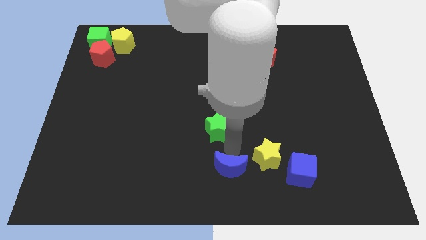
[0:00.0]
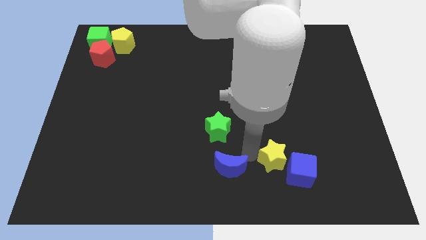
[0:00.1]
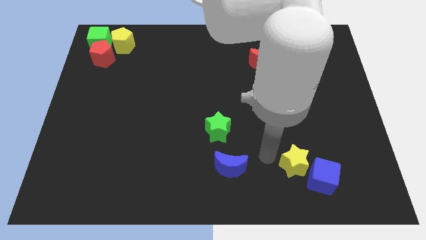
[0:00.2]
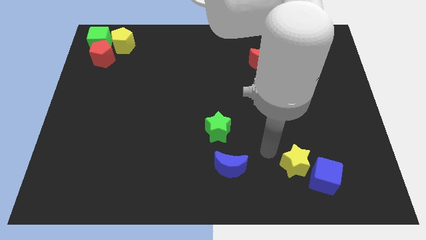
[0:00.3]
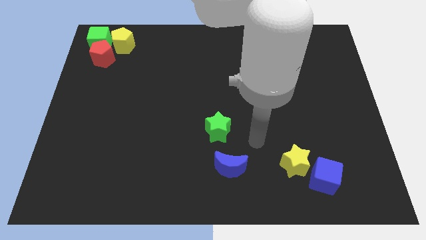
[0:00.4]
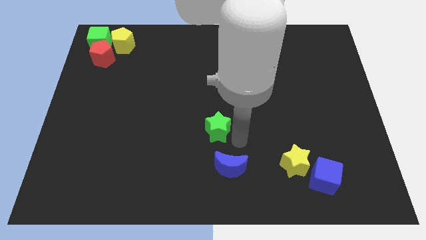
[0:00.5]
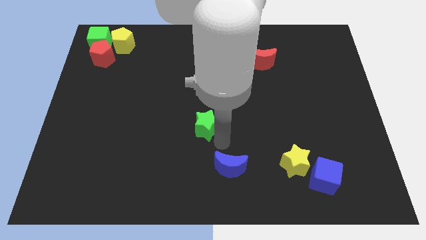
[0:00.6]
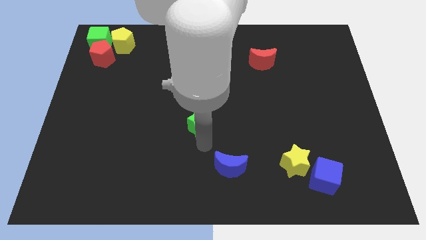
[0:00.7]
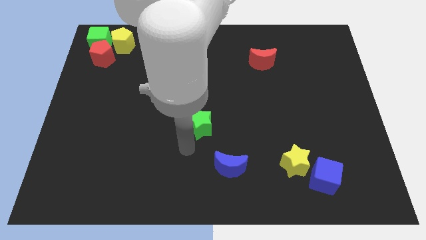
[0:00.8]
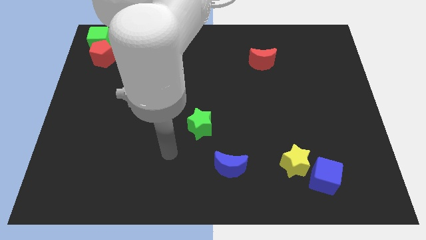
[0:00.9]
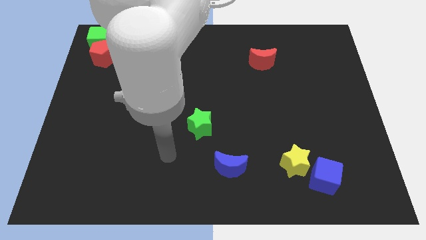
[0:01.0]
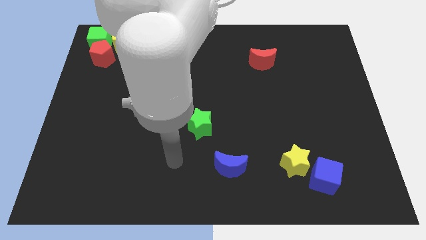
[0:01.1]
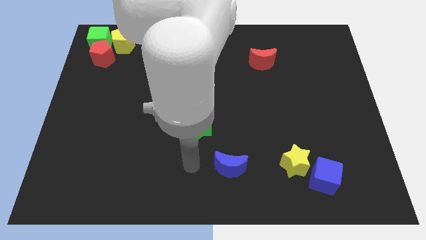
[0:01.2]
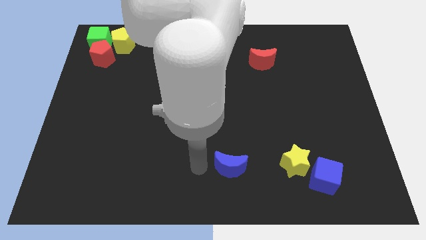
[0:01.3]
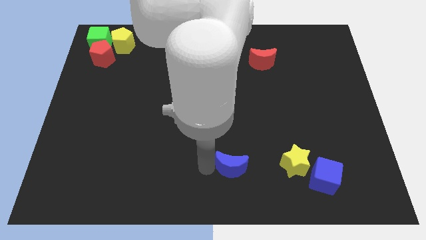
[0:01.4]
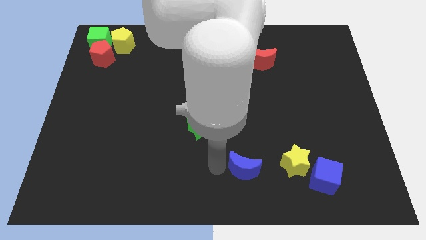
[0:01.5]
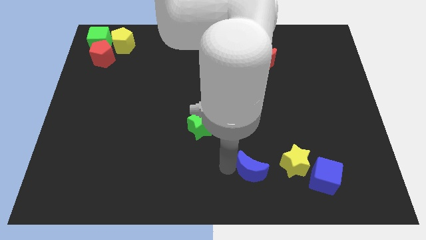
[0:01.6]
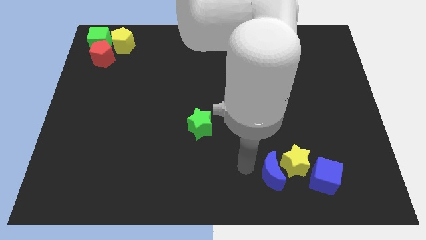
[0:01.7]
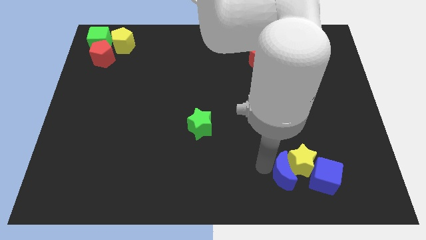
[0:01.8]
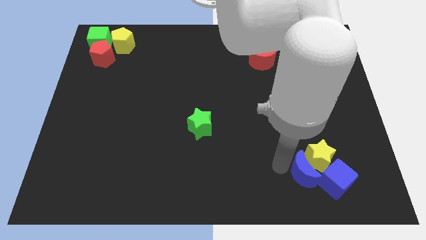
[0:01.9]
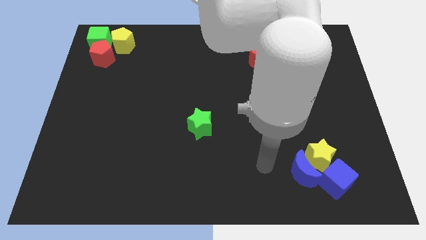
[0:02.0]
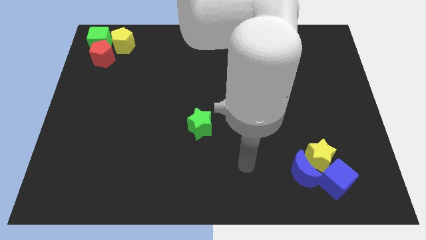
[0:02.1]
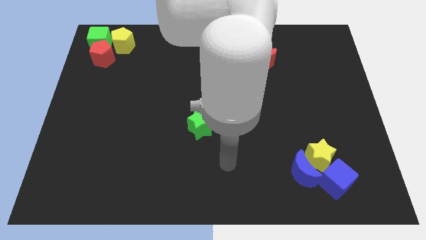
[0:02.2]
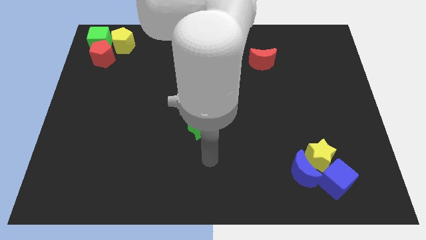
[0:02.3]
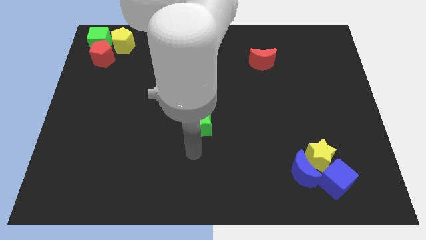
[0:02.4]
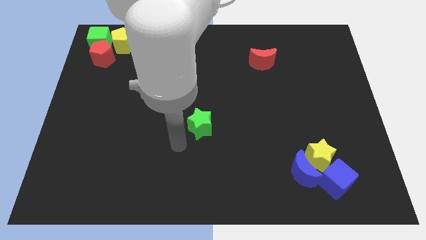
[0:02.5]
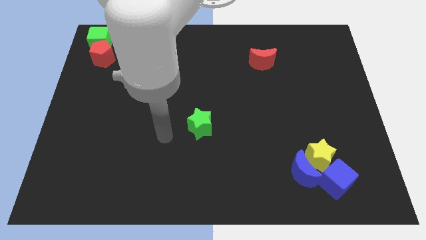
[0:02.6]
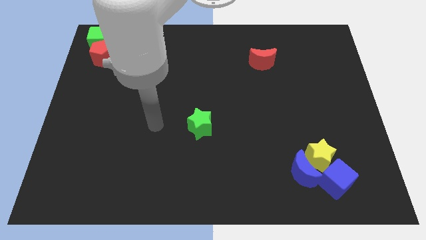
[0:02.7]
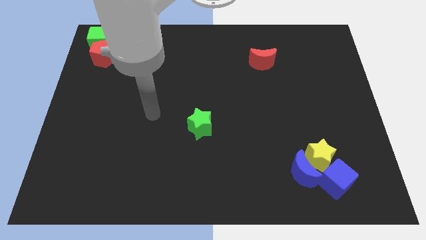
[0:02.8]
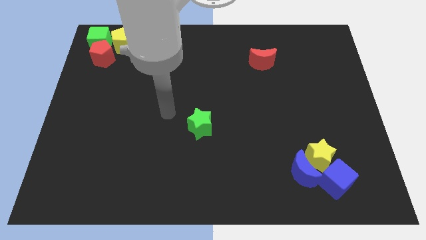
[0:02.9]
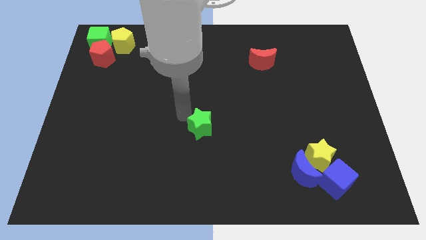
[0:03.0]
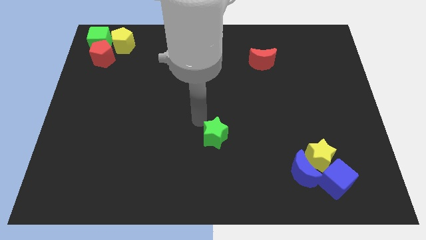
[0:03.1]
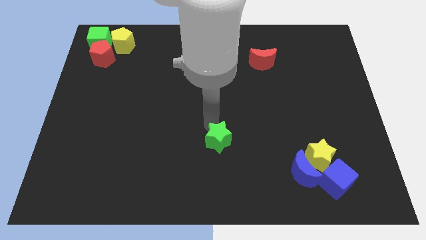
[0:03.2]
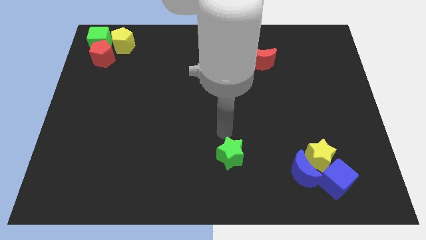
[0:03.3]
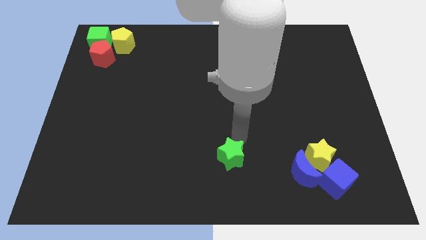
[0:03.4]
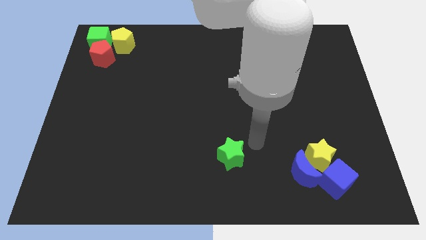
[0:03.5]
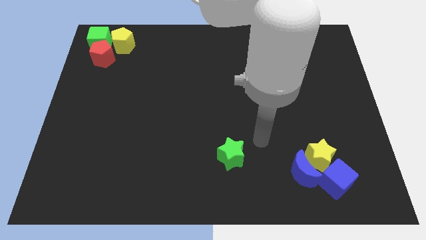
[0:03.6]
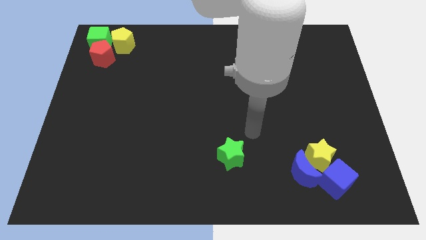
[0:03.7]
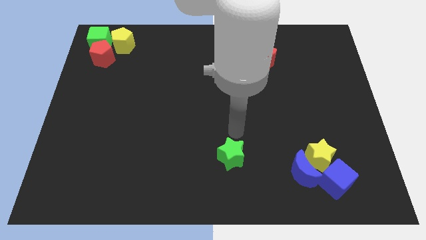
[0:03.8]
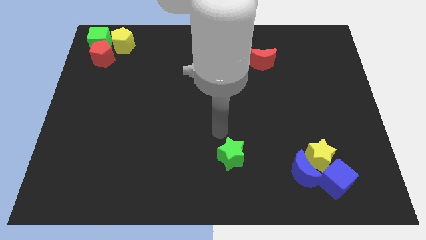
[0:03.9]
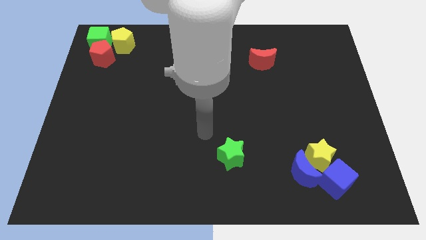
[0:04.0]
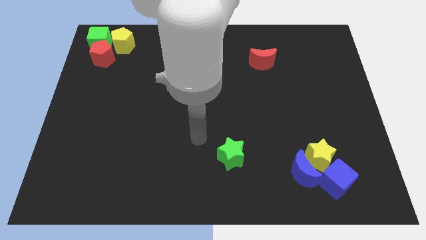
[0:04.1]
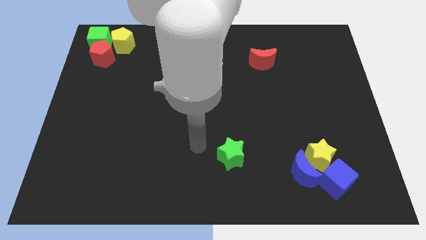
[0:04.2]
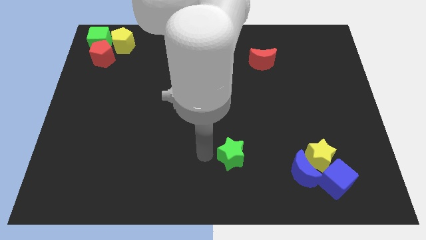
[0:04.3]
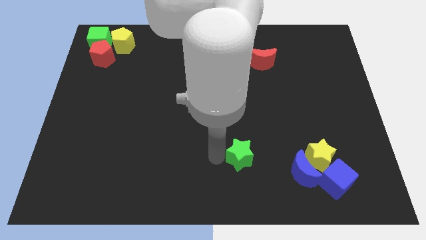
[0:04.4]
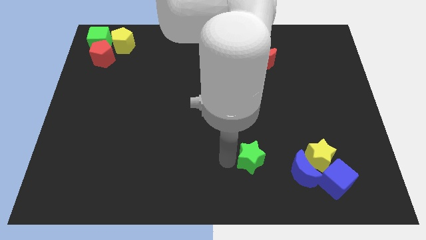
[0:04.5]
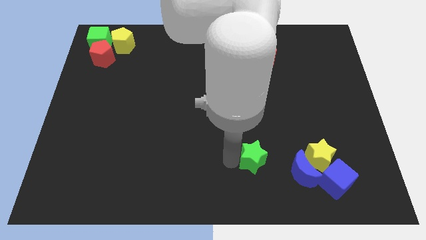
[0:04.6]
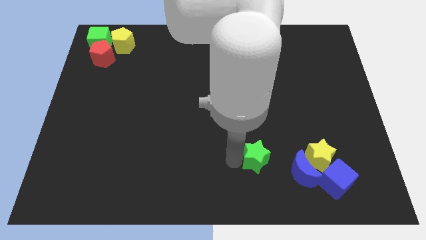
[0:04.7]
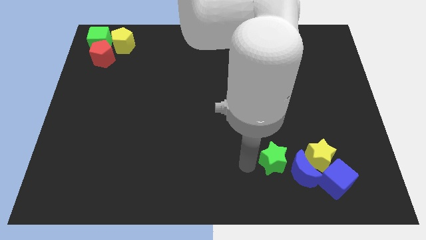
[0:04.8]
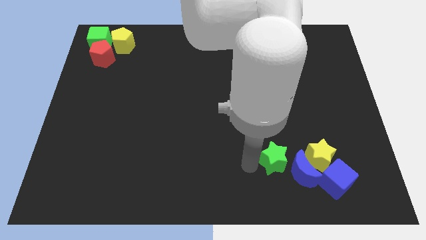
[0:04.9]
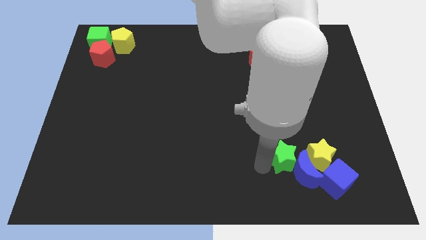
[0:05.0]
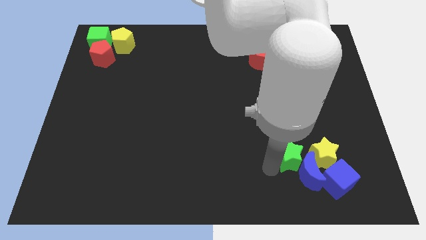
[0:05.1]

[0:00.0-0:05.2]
move both the stars and the blue blocks towards the bottom right of the board

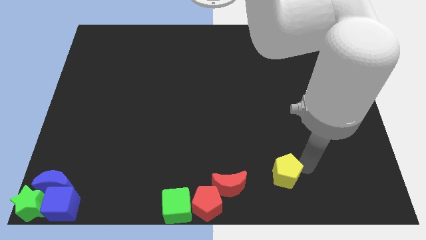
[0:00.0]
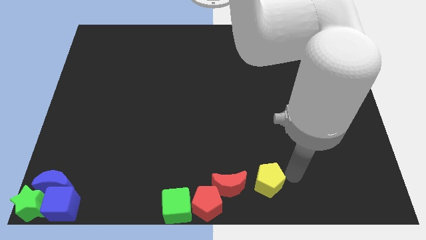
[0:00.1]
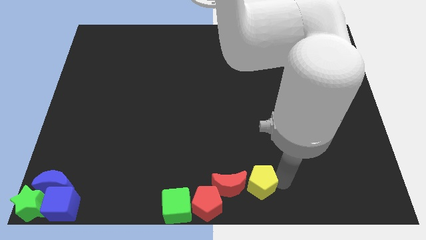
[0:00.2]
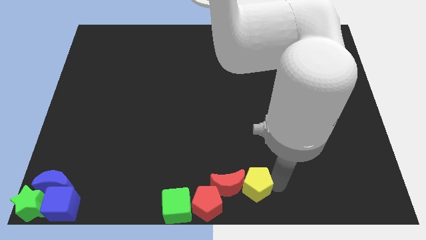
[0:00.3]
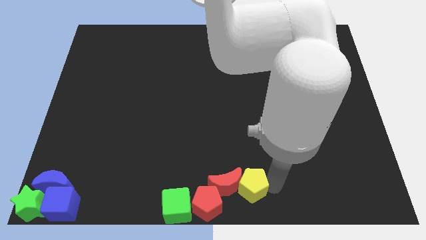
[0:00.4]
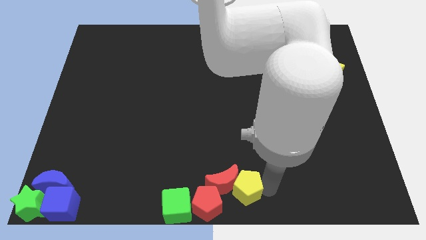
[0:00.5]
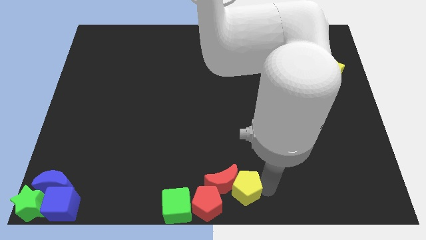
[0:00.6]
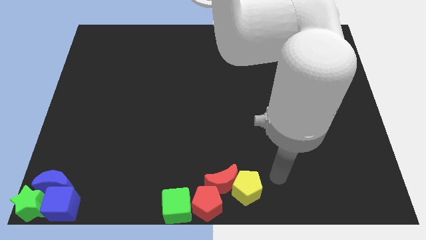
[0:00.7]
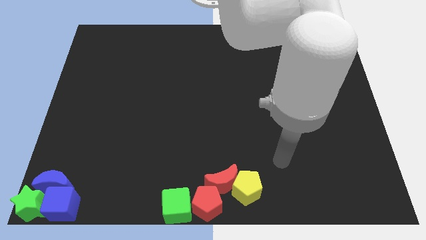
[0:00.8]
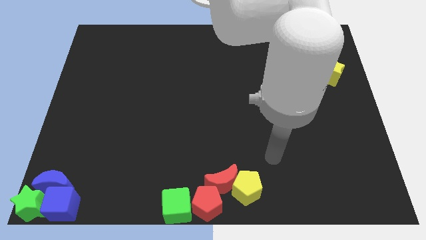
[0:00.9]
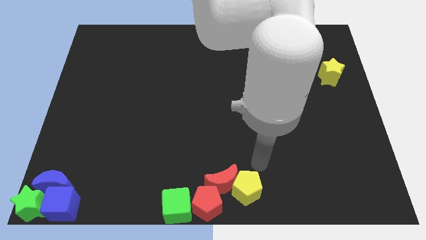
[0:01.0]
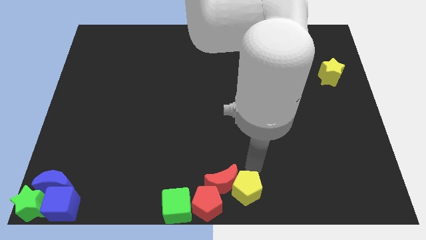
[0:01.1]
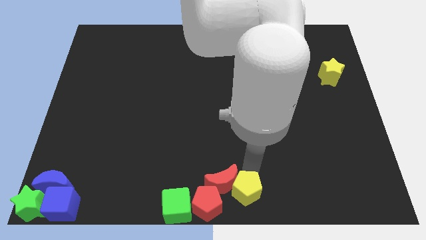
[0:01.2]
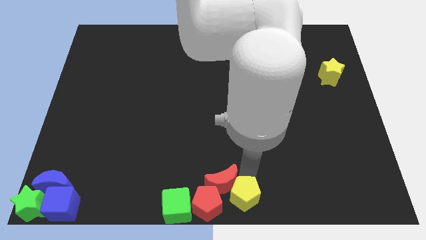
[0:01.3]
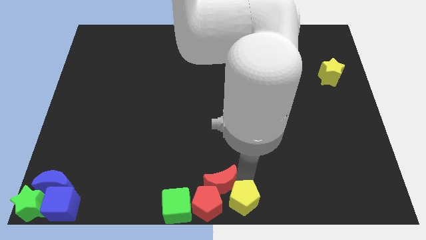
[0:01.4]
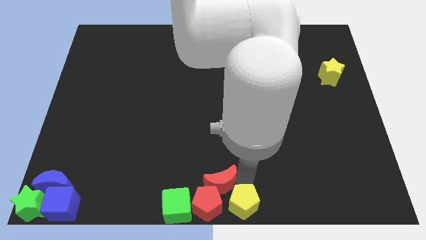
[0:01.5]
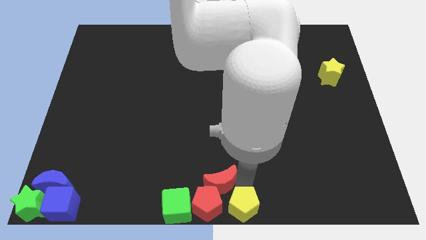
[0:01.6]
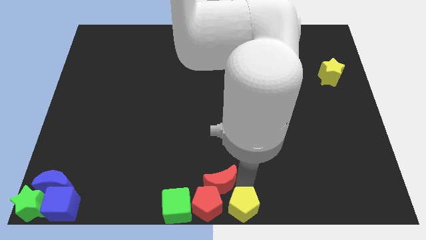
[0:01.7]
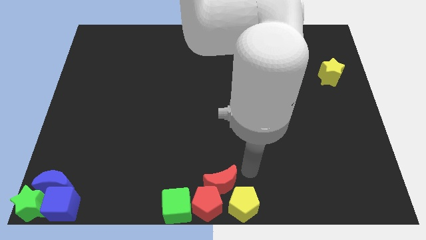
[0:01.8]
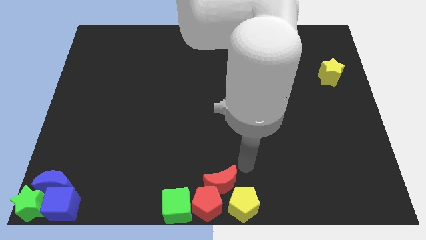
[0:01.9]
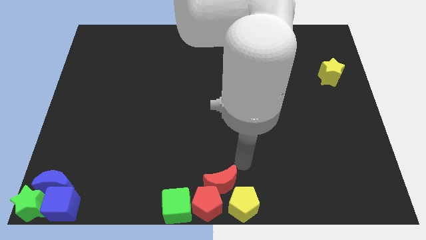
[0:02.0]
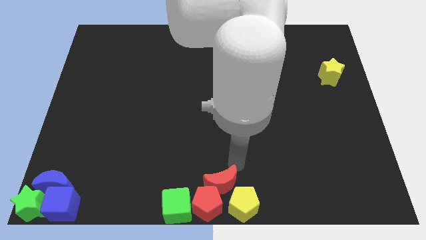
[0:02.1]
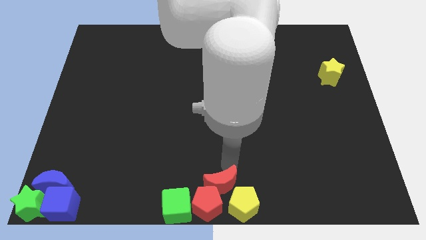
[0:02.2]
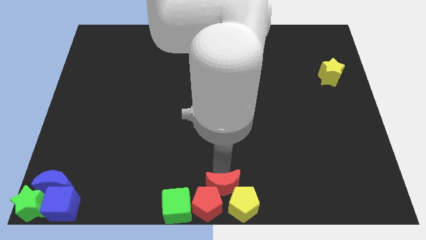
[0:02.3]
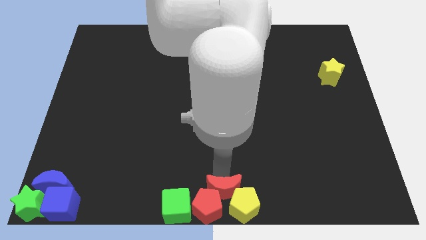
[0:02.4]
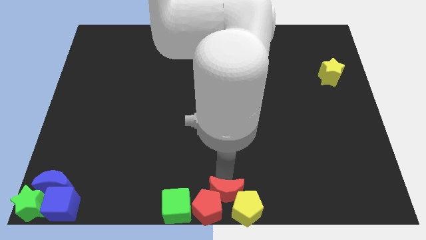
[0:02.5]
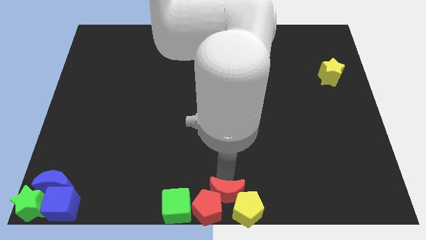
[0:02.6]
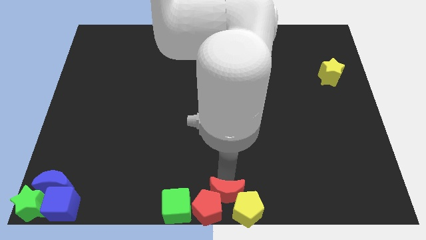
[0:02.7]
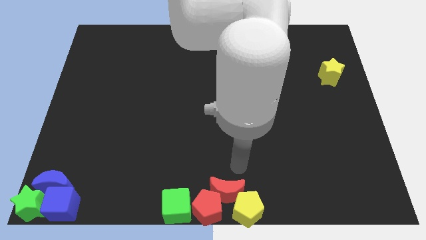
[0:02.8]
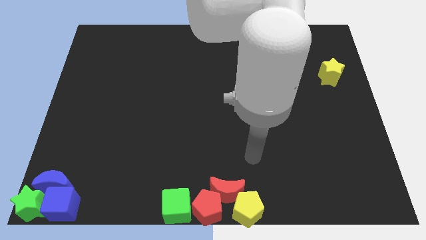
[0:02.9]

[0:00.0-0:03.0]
place the yellow pentagon right to the red pentagon

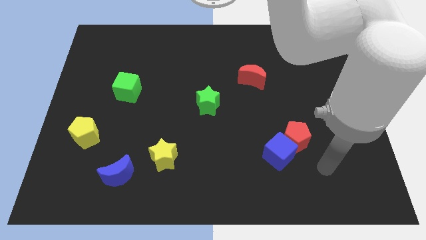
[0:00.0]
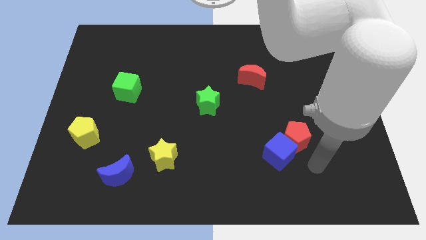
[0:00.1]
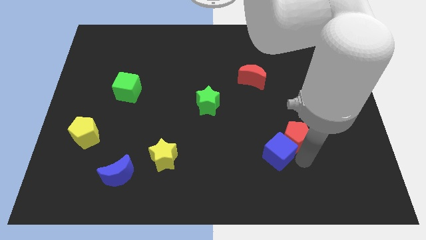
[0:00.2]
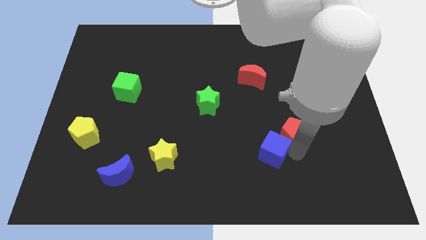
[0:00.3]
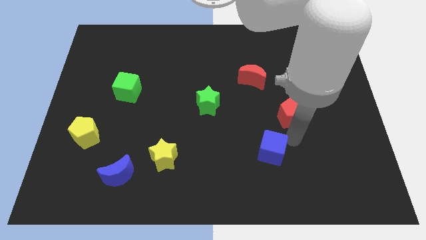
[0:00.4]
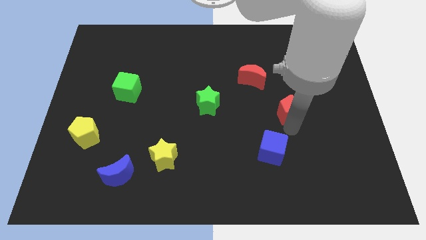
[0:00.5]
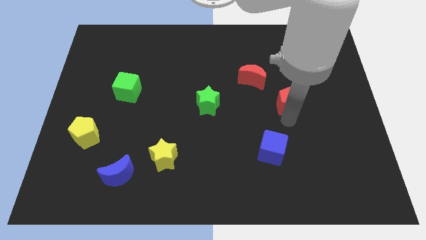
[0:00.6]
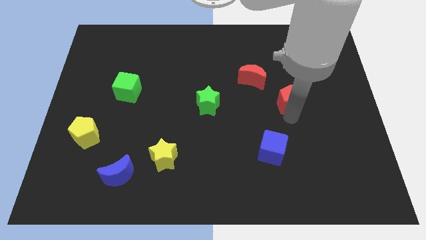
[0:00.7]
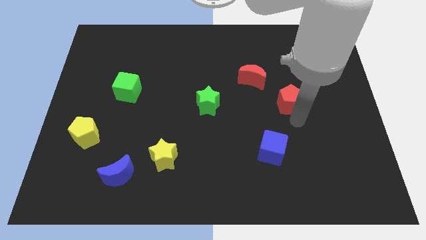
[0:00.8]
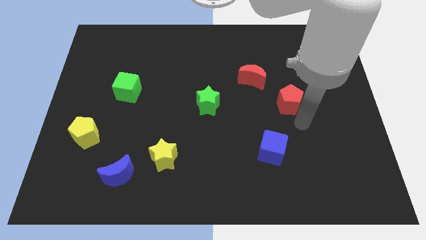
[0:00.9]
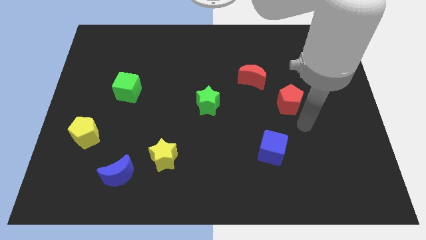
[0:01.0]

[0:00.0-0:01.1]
separate the red pentagon from the blue cube
